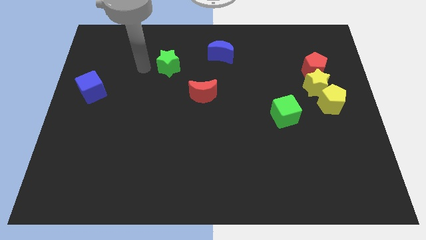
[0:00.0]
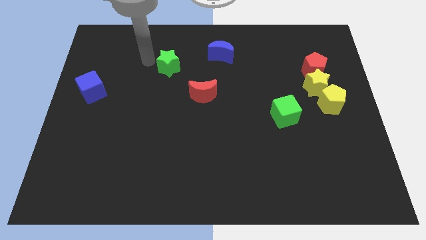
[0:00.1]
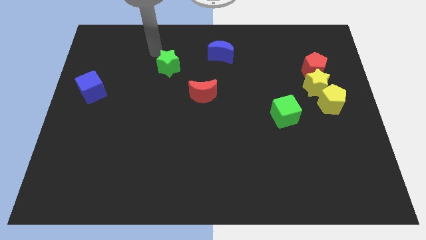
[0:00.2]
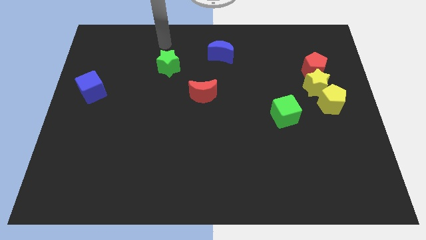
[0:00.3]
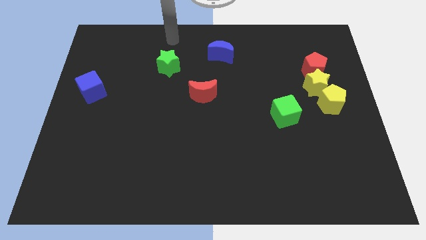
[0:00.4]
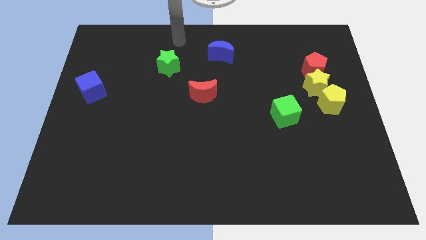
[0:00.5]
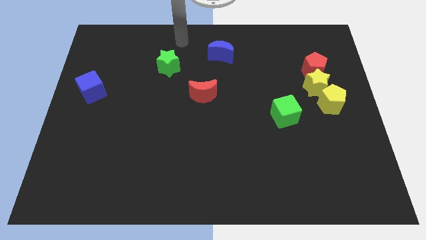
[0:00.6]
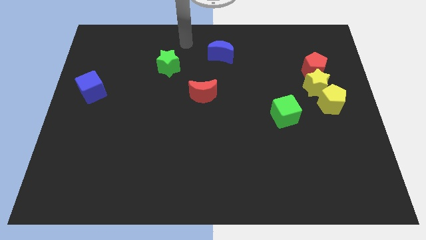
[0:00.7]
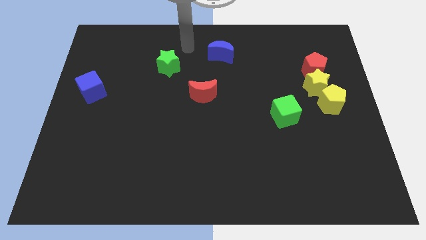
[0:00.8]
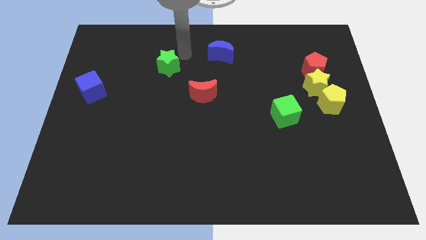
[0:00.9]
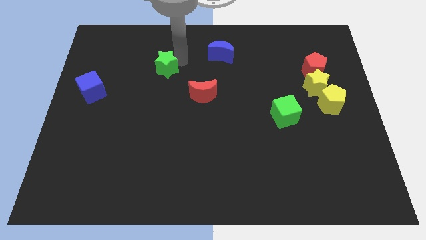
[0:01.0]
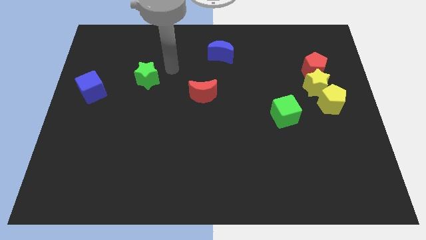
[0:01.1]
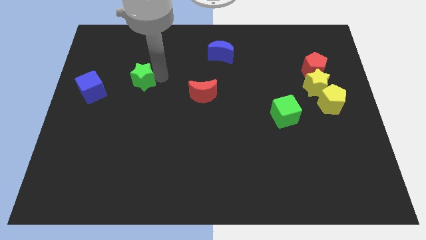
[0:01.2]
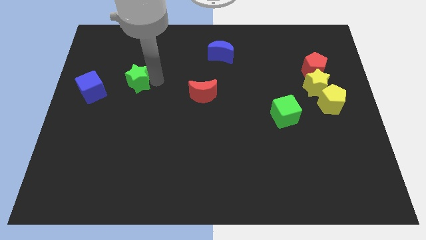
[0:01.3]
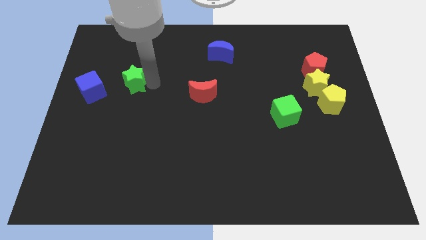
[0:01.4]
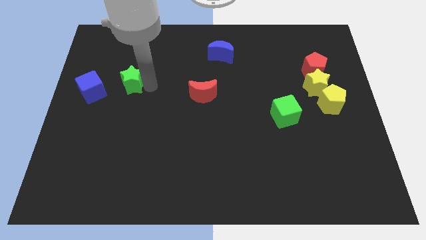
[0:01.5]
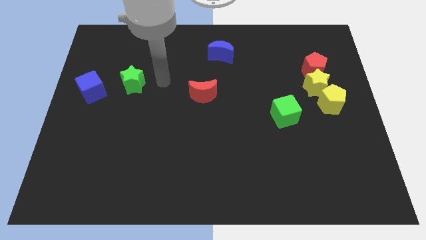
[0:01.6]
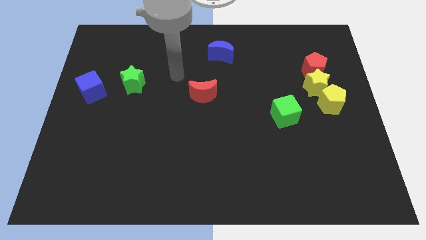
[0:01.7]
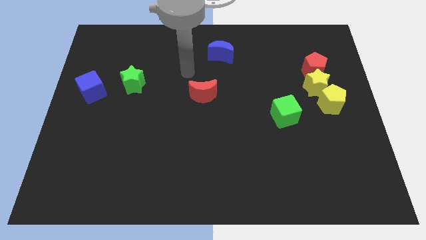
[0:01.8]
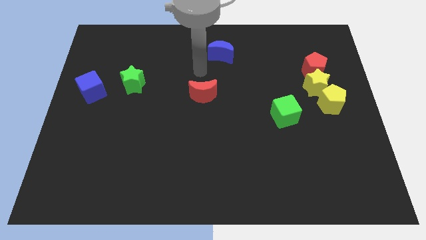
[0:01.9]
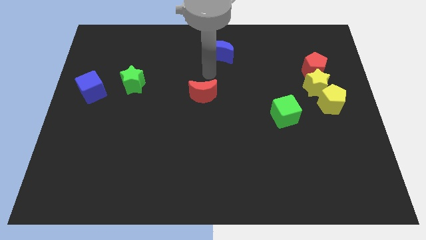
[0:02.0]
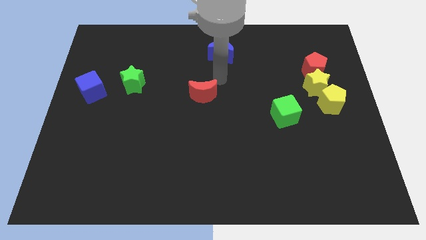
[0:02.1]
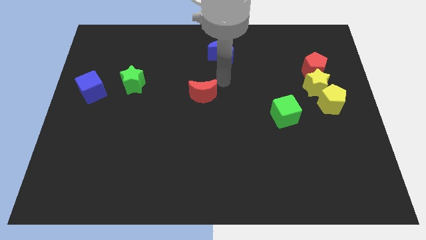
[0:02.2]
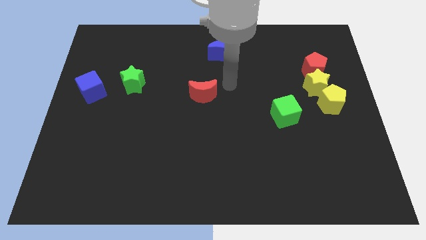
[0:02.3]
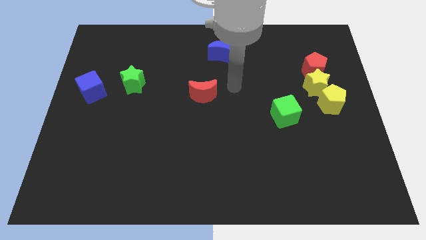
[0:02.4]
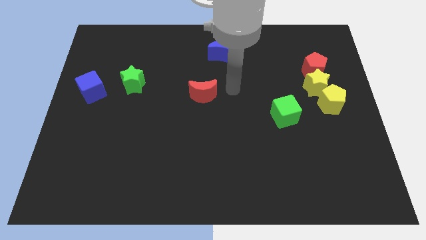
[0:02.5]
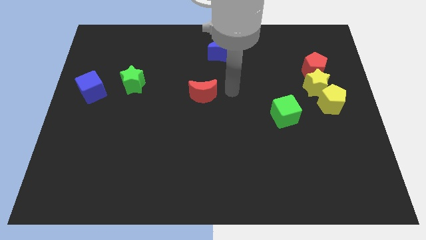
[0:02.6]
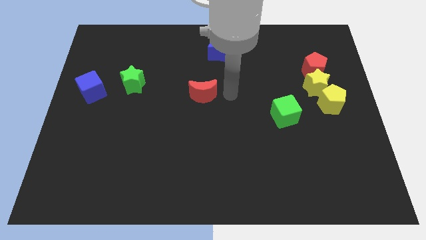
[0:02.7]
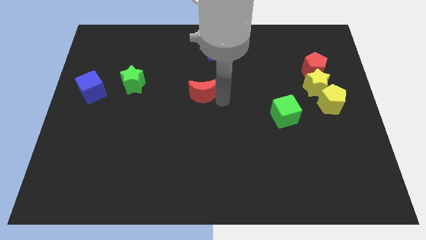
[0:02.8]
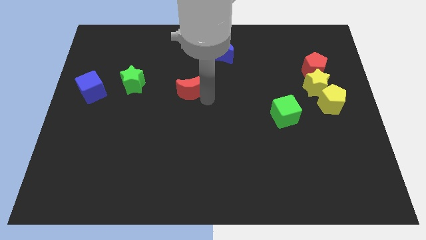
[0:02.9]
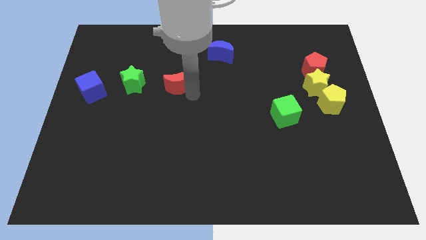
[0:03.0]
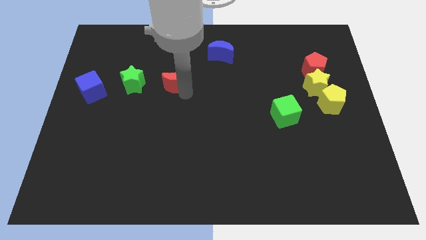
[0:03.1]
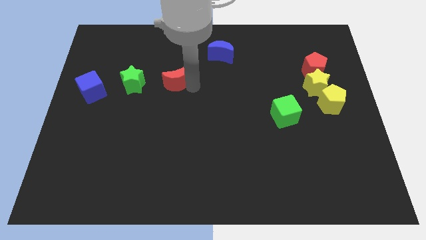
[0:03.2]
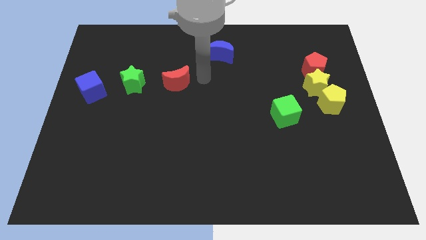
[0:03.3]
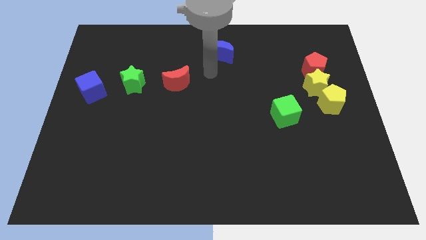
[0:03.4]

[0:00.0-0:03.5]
adjust the green star and red crescent to the right of the blue cube

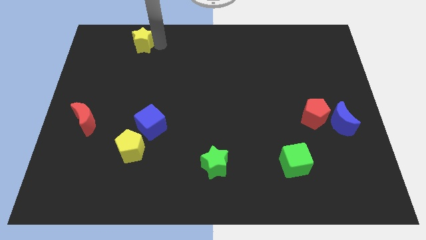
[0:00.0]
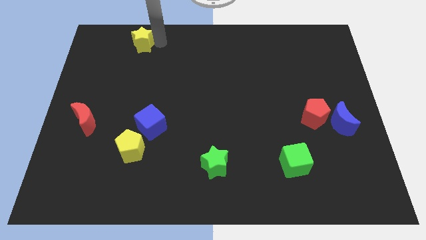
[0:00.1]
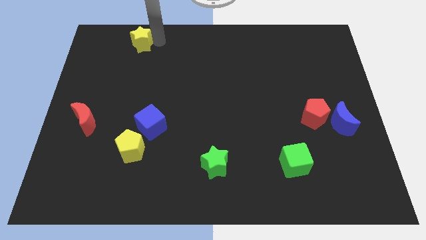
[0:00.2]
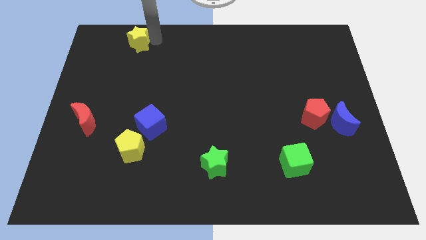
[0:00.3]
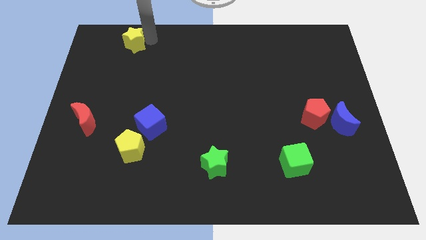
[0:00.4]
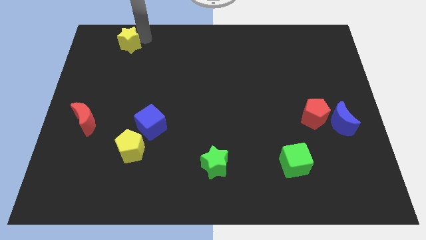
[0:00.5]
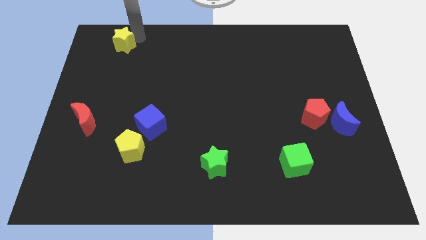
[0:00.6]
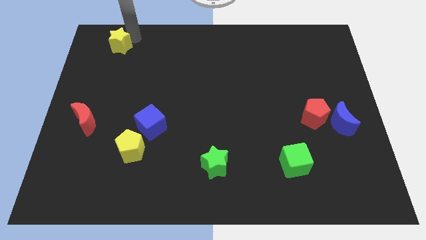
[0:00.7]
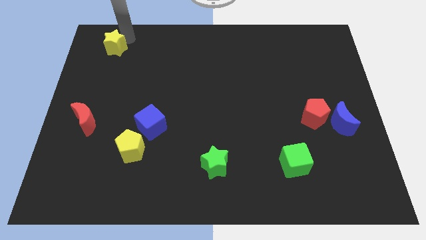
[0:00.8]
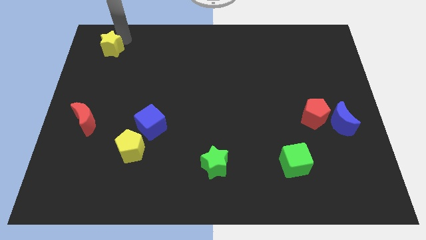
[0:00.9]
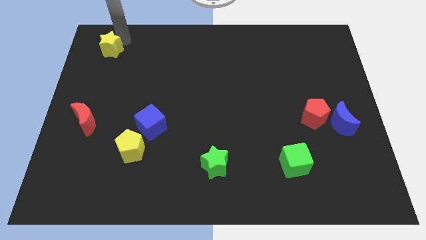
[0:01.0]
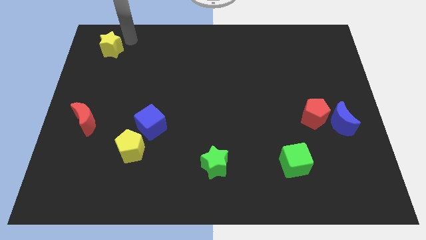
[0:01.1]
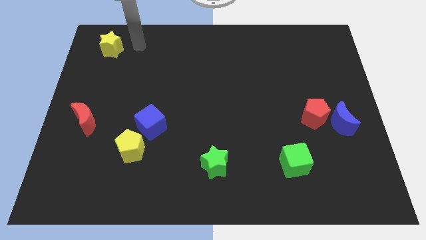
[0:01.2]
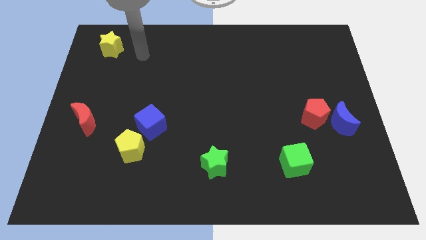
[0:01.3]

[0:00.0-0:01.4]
put the yellow star vertically above the red crescent

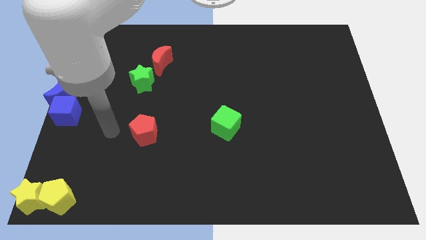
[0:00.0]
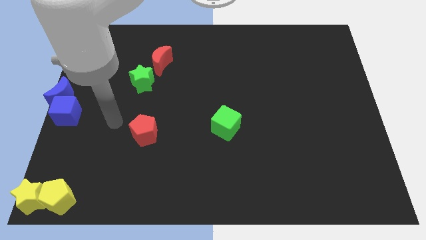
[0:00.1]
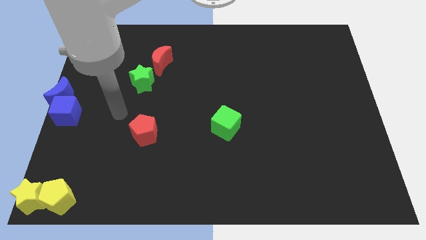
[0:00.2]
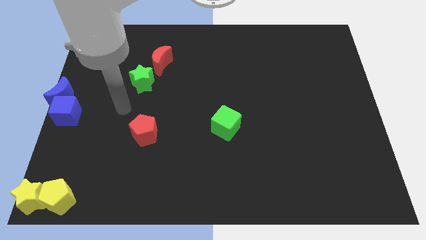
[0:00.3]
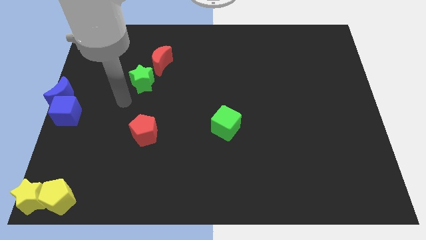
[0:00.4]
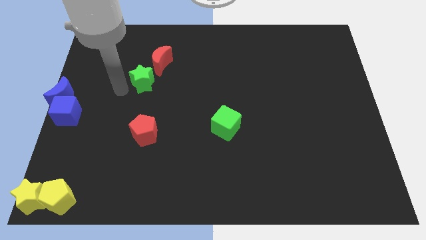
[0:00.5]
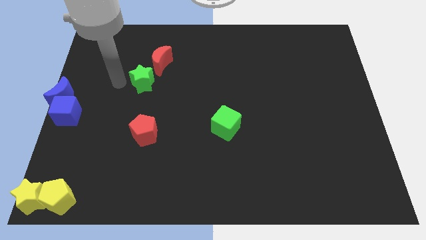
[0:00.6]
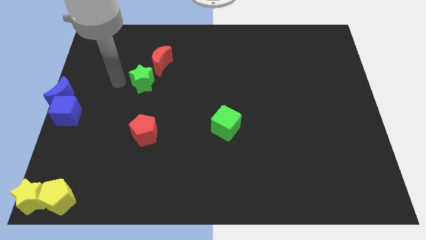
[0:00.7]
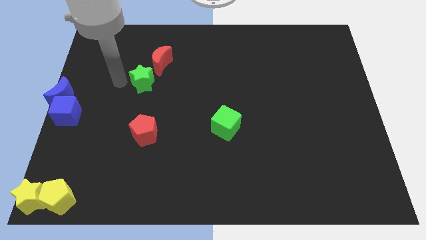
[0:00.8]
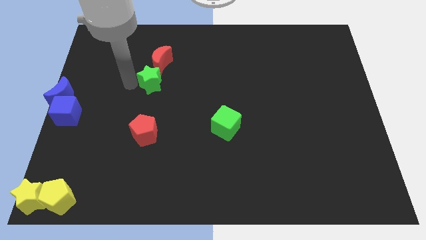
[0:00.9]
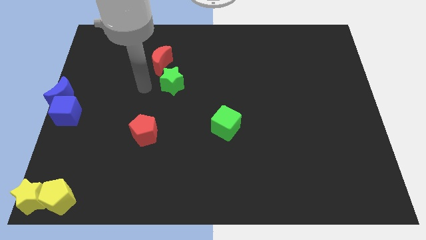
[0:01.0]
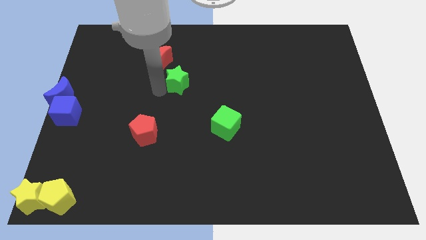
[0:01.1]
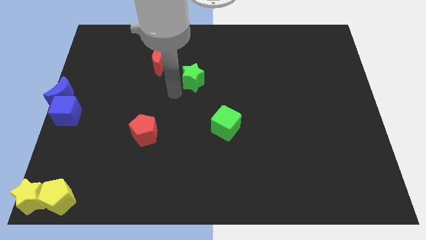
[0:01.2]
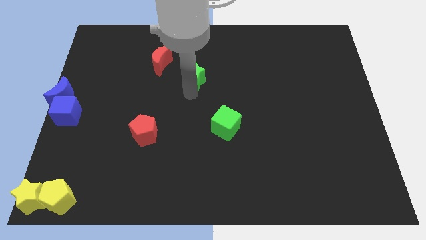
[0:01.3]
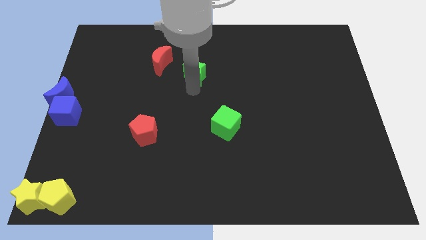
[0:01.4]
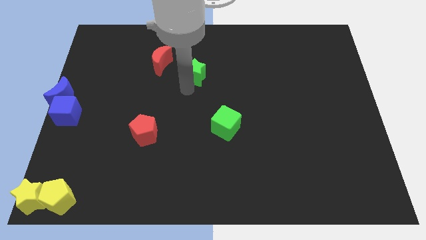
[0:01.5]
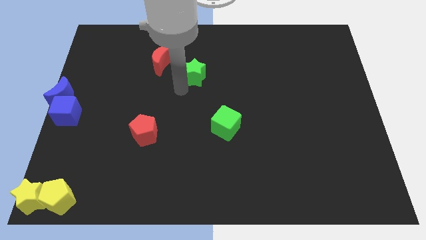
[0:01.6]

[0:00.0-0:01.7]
drag the green star diagonally bottom right to the red crescent

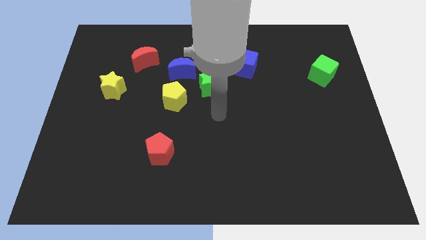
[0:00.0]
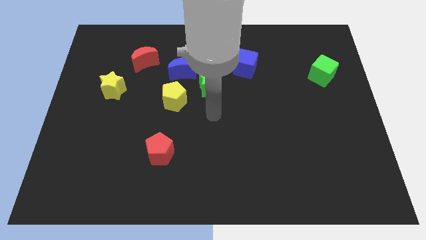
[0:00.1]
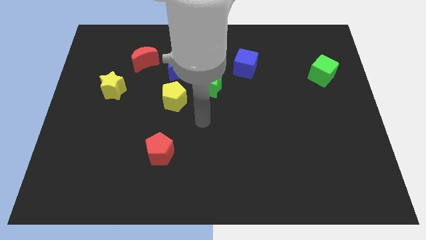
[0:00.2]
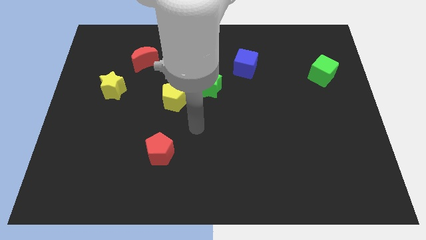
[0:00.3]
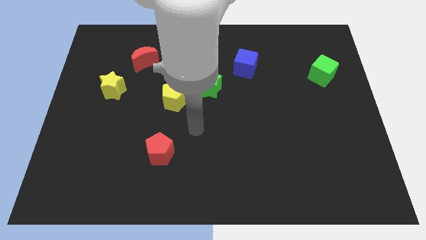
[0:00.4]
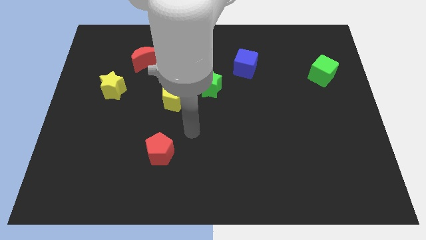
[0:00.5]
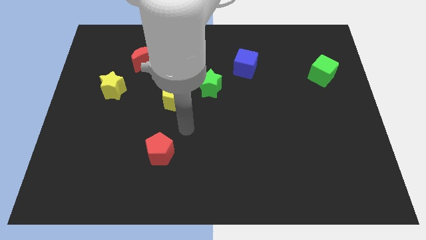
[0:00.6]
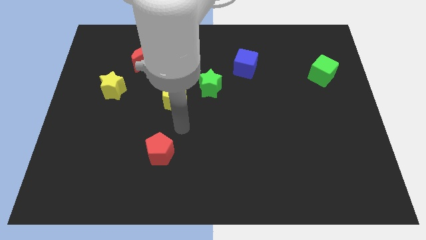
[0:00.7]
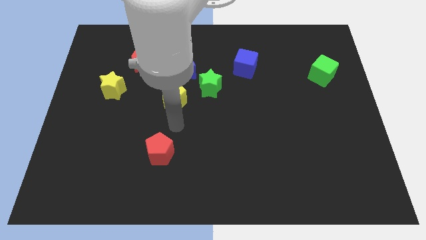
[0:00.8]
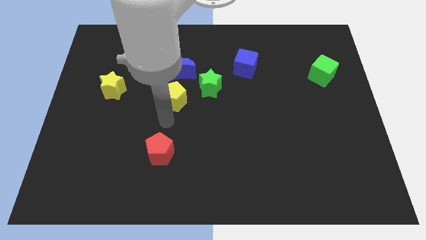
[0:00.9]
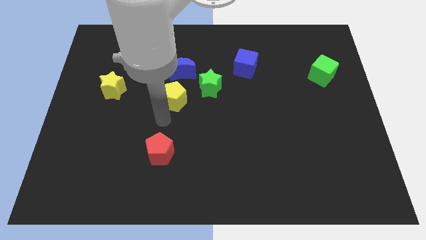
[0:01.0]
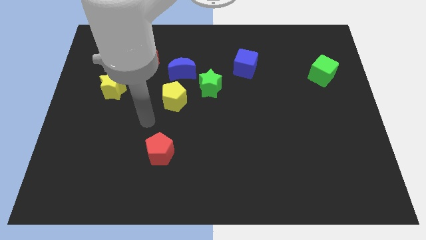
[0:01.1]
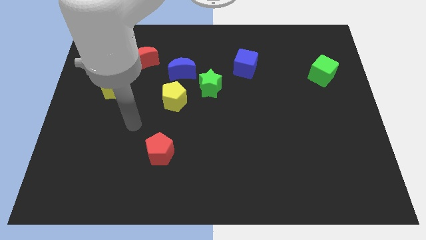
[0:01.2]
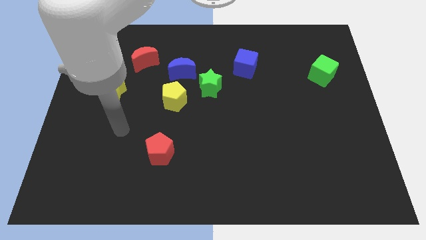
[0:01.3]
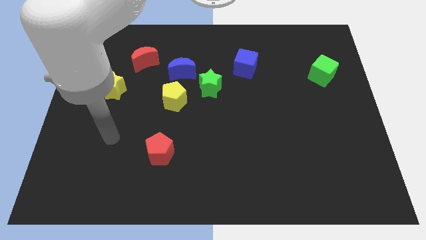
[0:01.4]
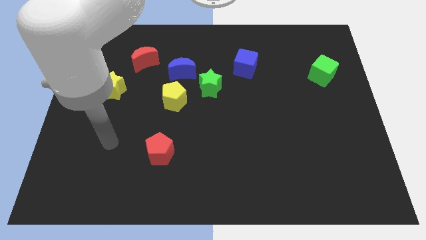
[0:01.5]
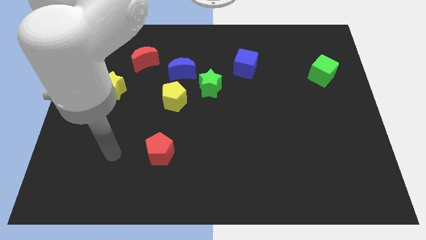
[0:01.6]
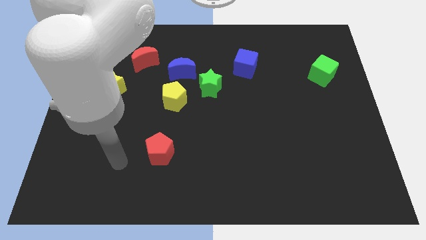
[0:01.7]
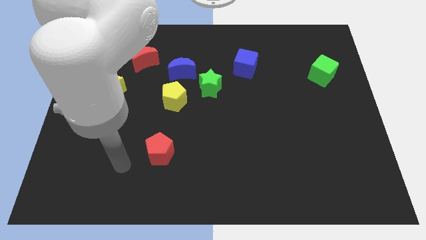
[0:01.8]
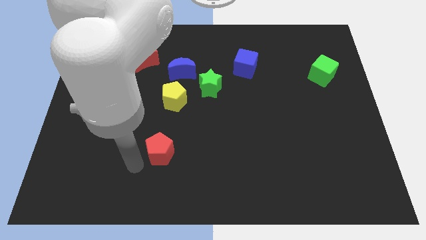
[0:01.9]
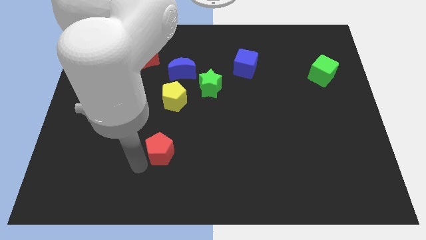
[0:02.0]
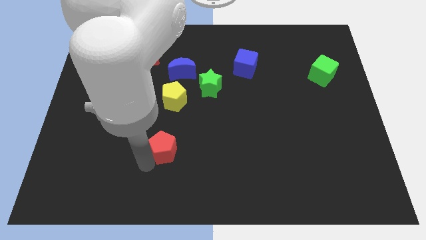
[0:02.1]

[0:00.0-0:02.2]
point your arm below red pentagon

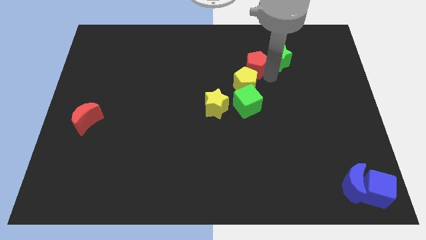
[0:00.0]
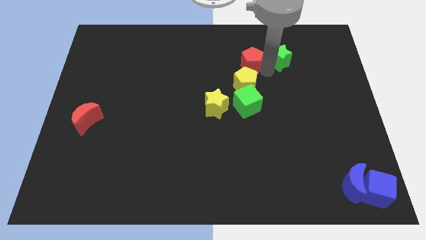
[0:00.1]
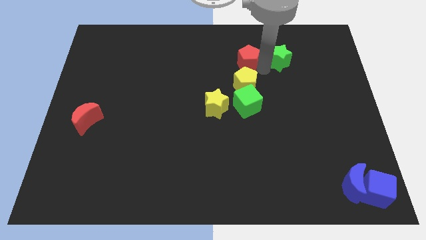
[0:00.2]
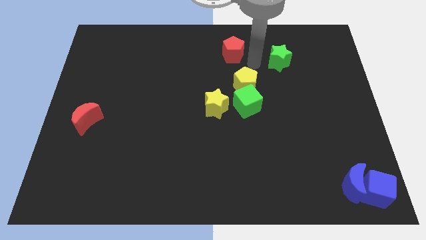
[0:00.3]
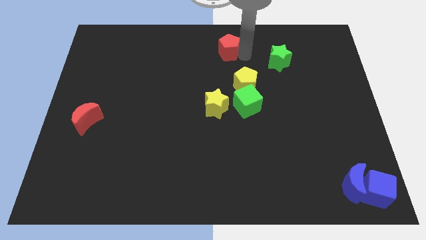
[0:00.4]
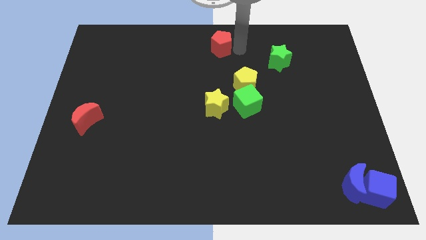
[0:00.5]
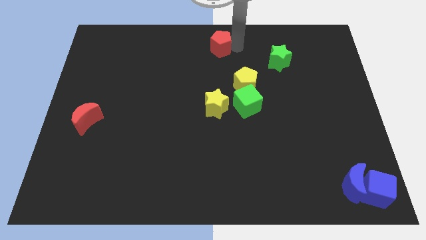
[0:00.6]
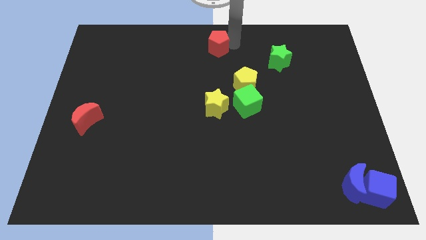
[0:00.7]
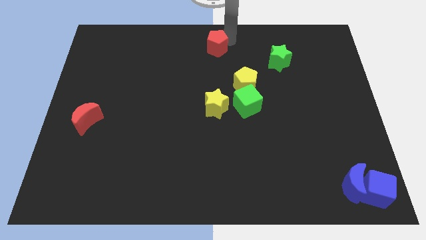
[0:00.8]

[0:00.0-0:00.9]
separate red pentagon from yellow pentagon and green star
